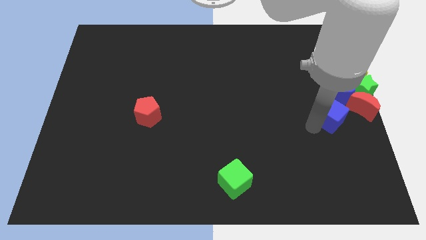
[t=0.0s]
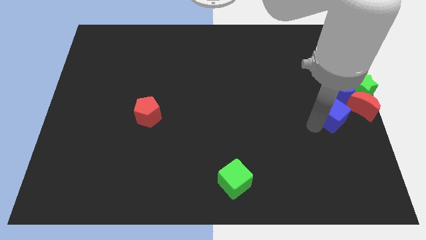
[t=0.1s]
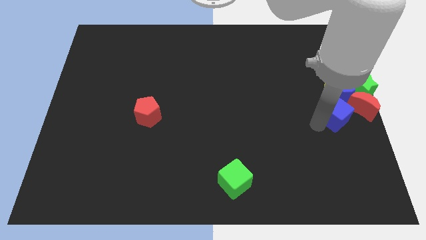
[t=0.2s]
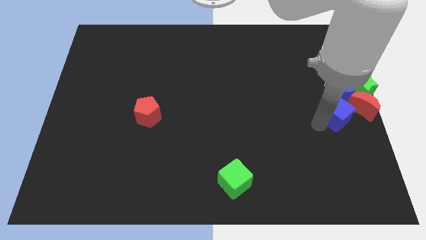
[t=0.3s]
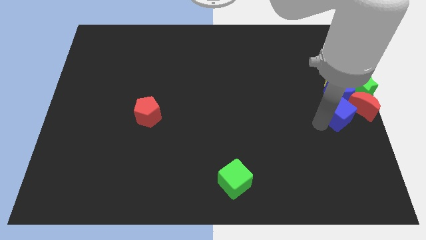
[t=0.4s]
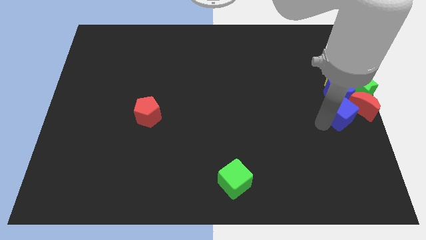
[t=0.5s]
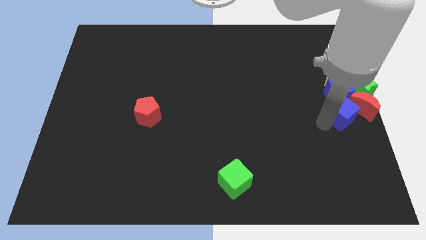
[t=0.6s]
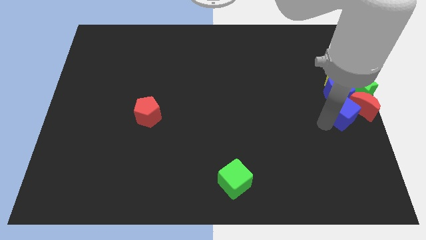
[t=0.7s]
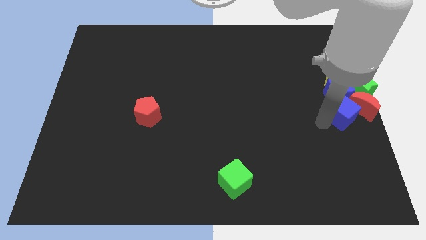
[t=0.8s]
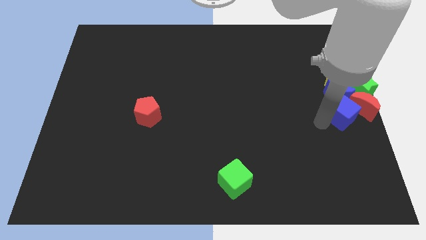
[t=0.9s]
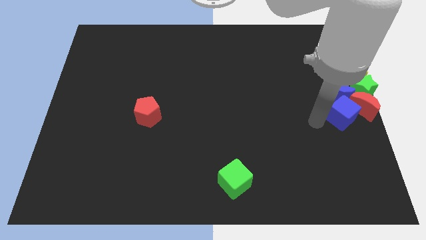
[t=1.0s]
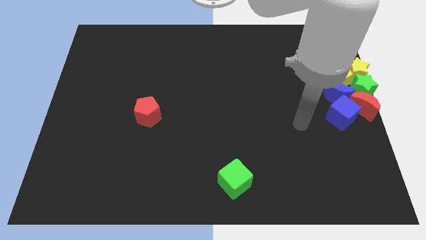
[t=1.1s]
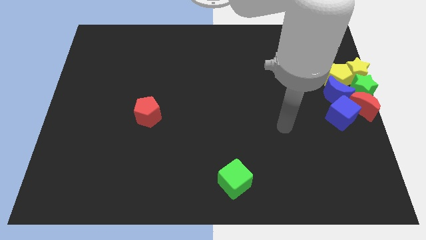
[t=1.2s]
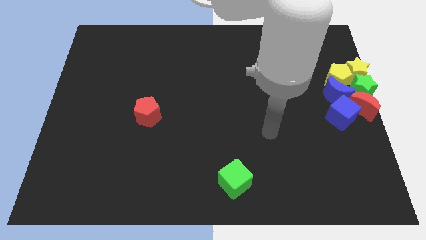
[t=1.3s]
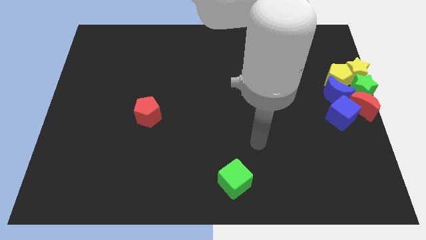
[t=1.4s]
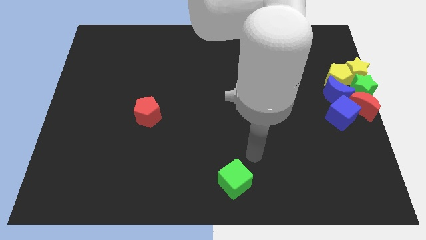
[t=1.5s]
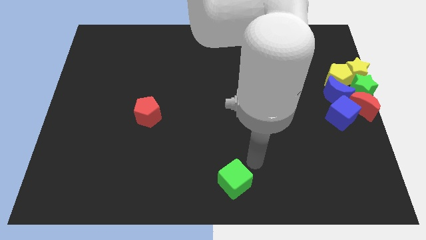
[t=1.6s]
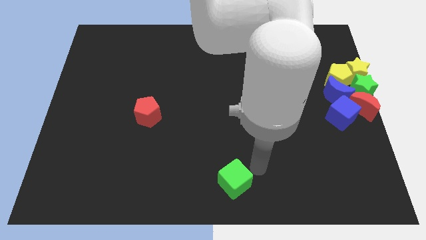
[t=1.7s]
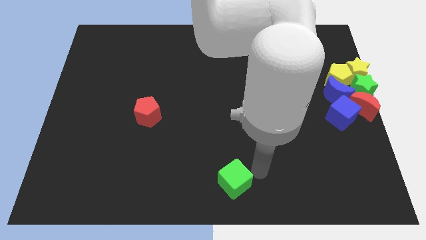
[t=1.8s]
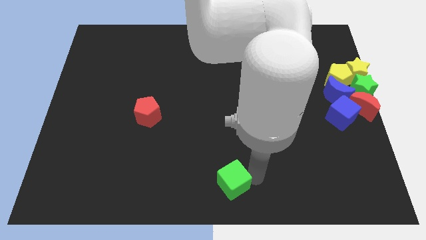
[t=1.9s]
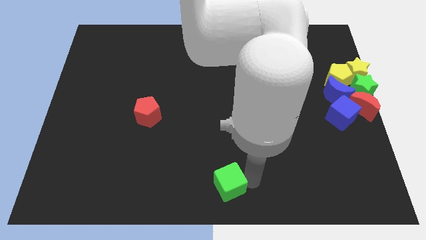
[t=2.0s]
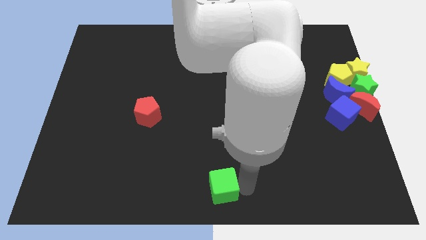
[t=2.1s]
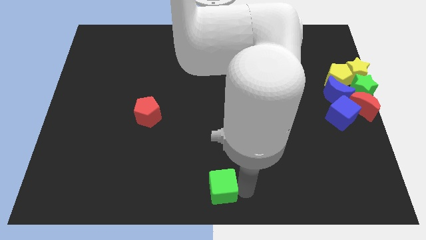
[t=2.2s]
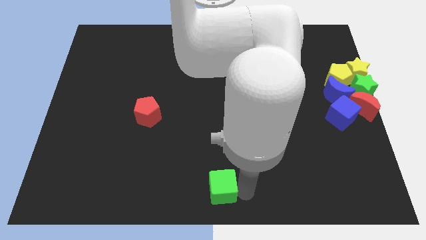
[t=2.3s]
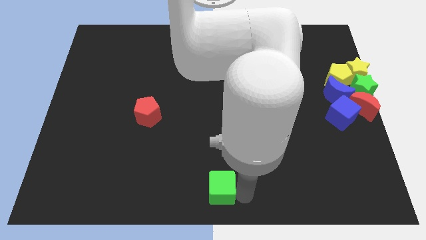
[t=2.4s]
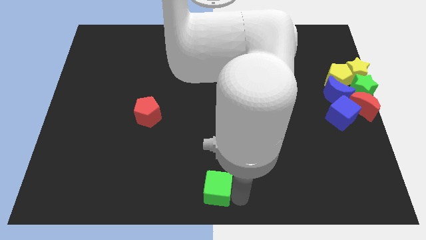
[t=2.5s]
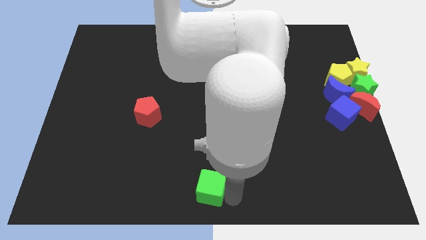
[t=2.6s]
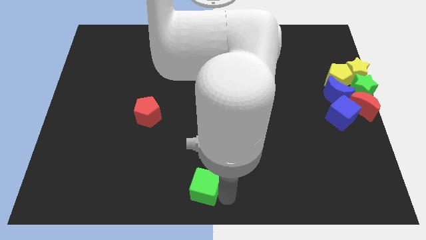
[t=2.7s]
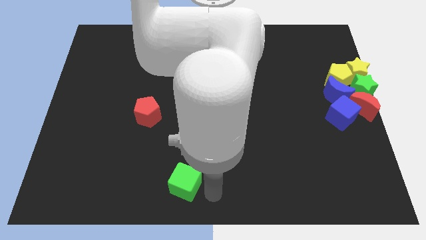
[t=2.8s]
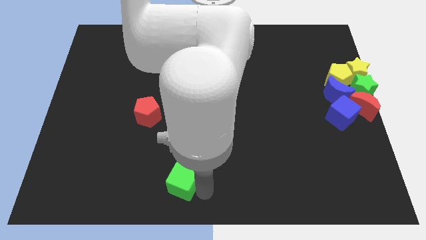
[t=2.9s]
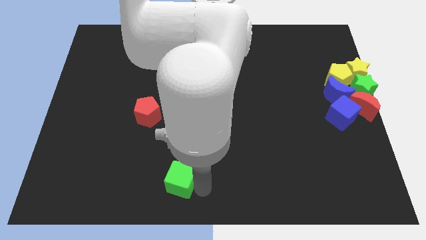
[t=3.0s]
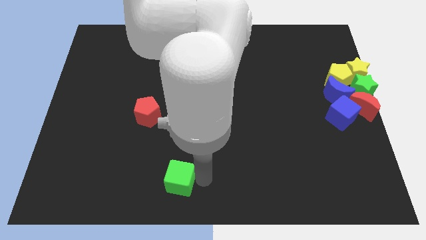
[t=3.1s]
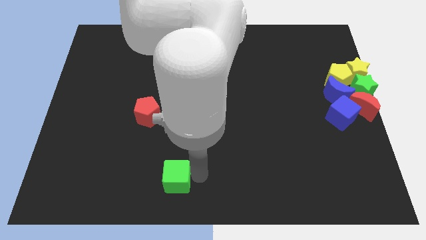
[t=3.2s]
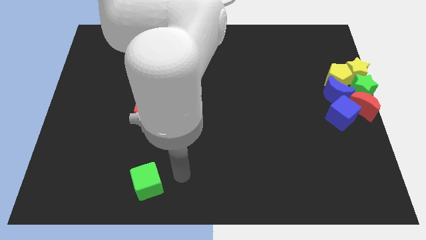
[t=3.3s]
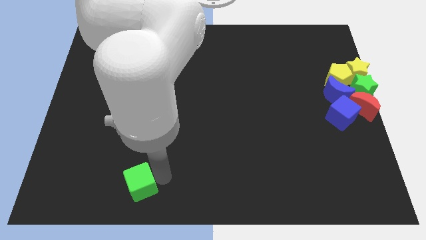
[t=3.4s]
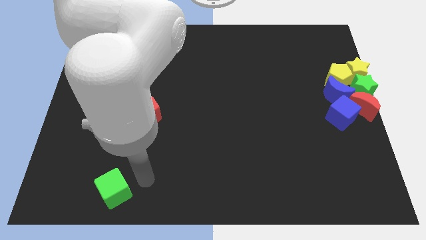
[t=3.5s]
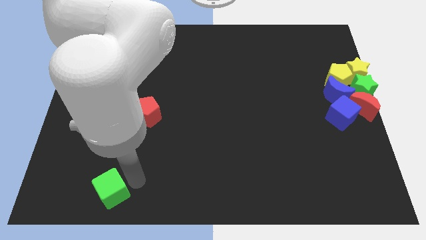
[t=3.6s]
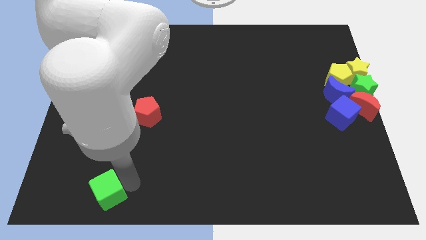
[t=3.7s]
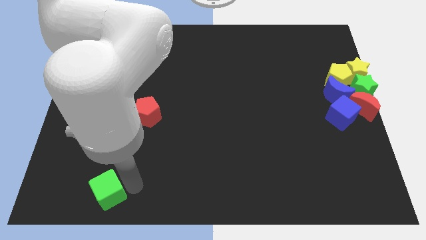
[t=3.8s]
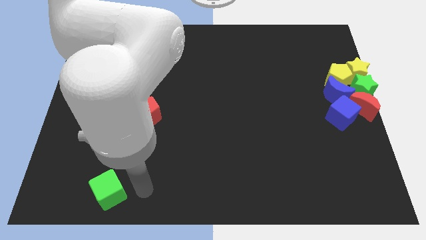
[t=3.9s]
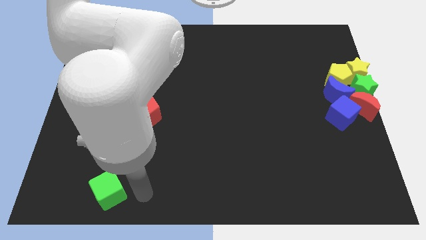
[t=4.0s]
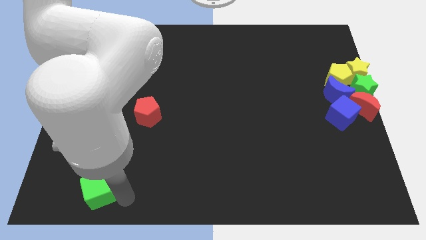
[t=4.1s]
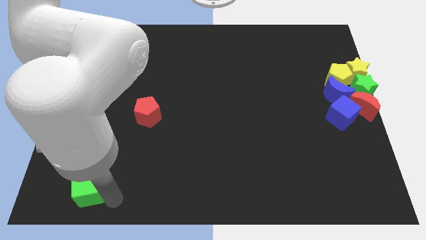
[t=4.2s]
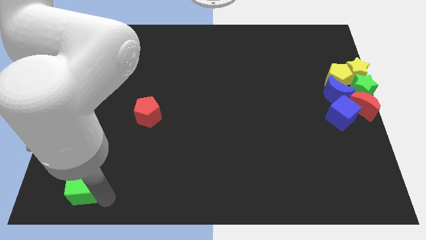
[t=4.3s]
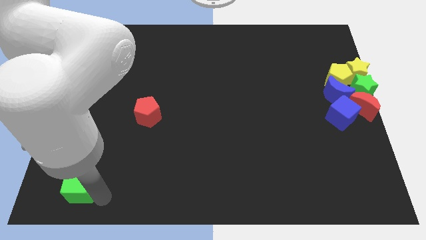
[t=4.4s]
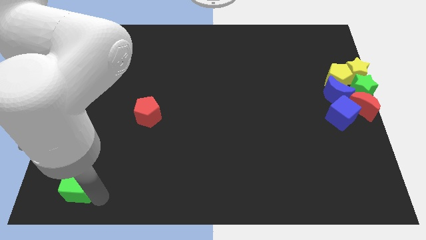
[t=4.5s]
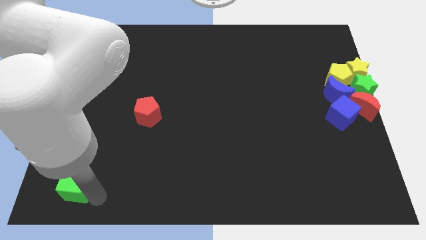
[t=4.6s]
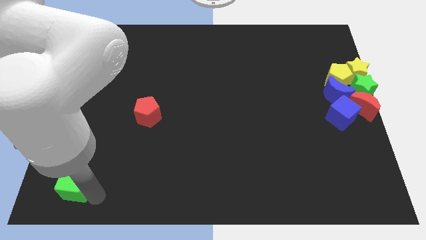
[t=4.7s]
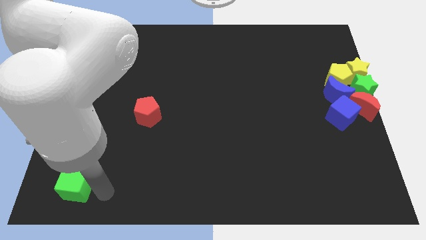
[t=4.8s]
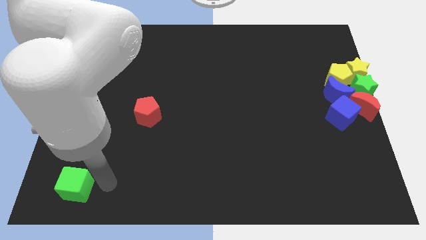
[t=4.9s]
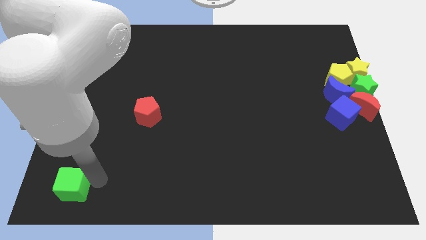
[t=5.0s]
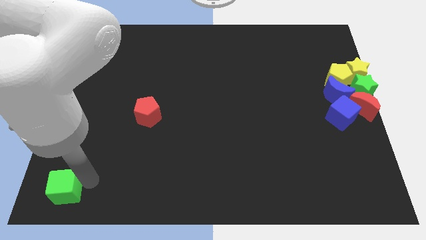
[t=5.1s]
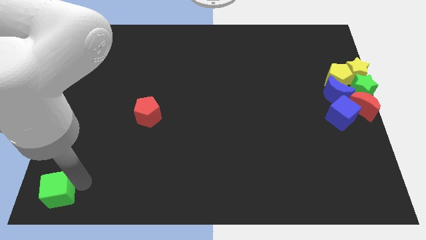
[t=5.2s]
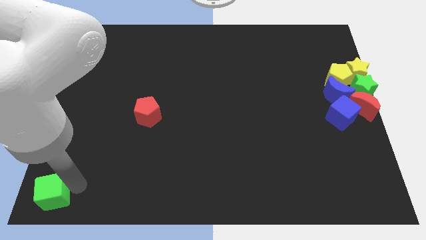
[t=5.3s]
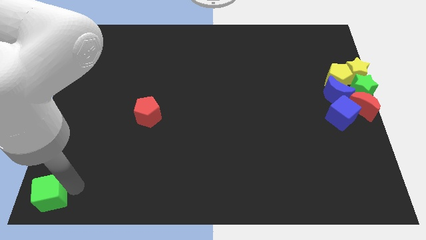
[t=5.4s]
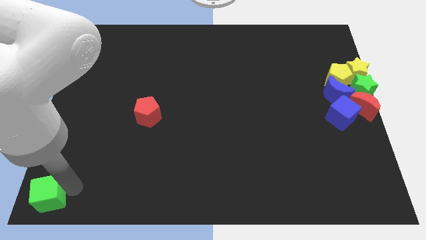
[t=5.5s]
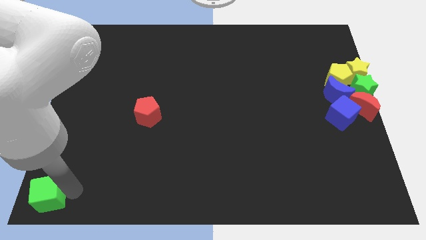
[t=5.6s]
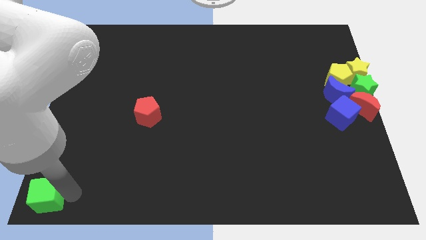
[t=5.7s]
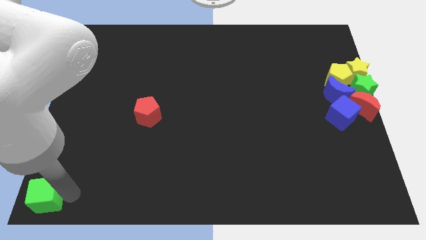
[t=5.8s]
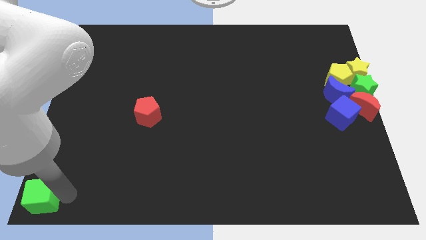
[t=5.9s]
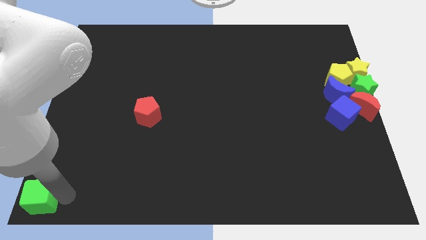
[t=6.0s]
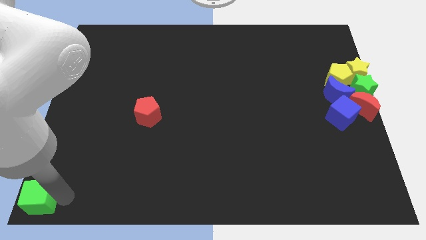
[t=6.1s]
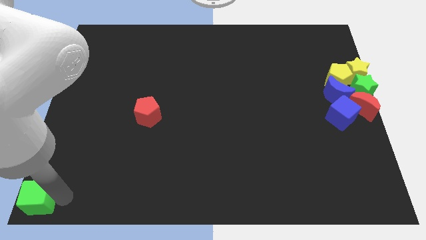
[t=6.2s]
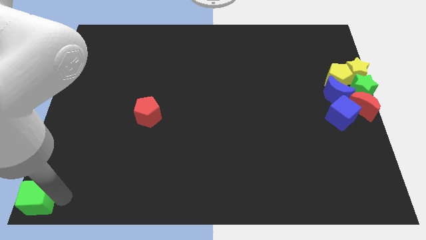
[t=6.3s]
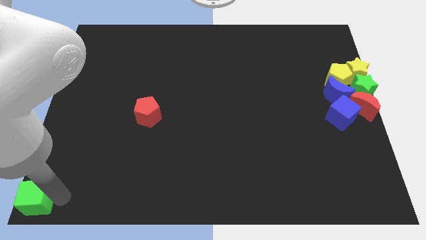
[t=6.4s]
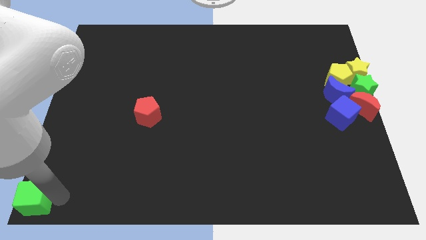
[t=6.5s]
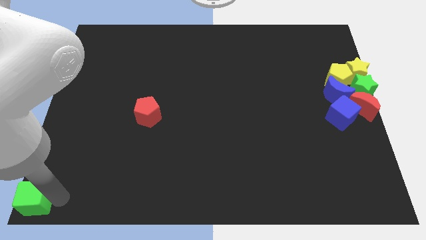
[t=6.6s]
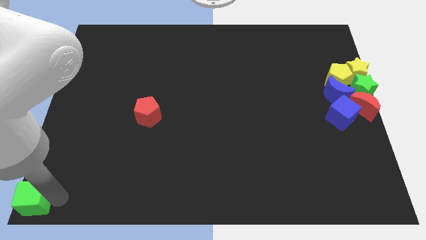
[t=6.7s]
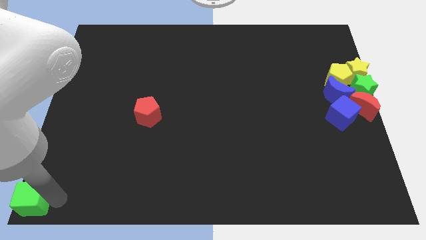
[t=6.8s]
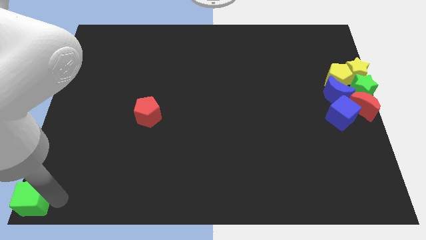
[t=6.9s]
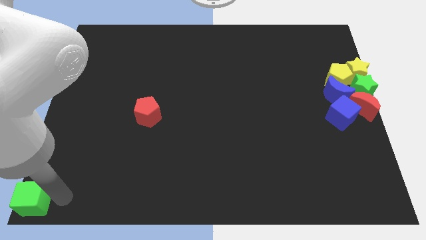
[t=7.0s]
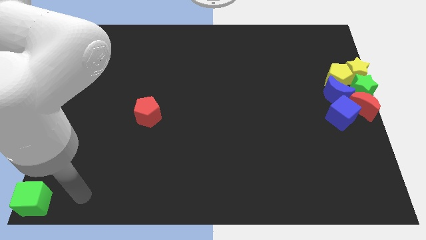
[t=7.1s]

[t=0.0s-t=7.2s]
place green cube at the bottom corner of the board

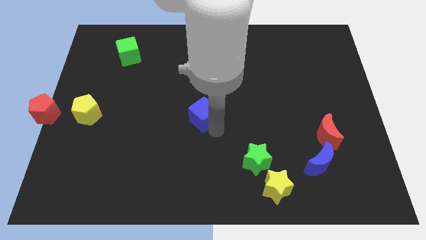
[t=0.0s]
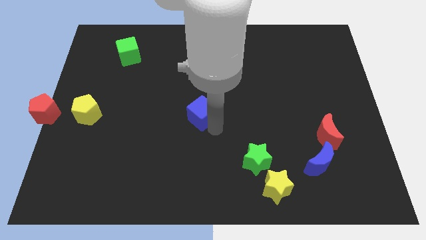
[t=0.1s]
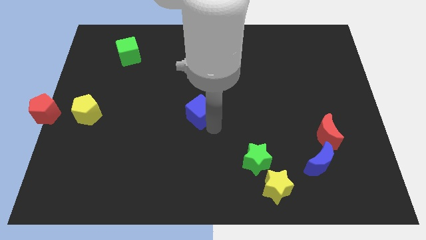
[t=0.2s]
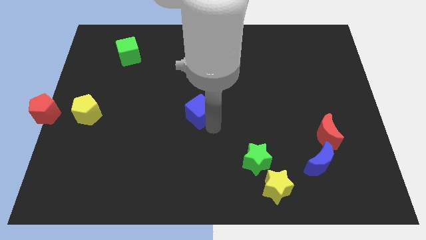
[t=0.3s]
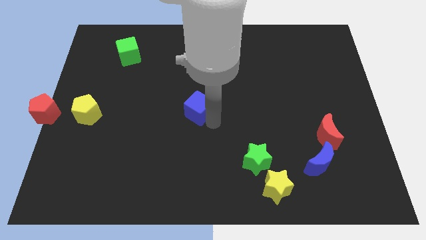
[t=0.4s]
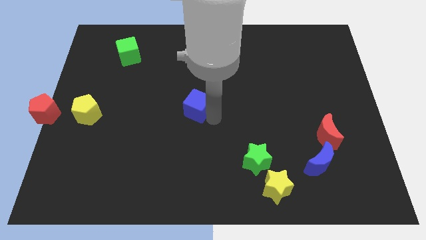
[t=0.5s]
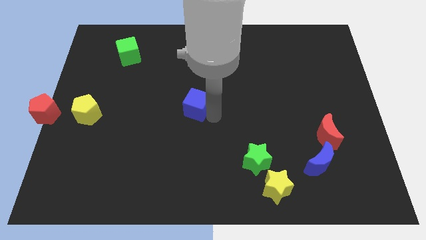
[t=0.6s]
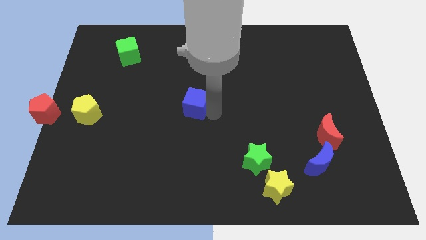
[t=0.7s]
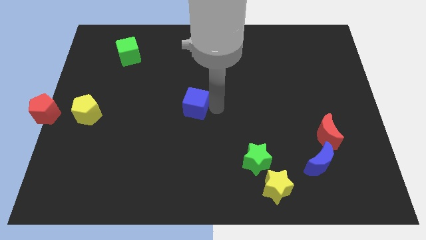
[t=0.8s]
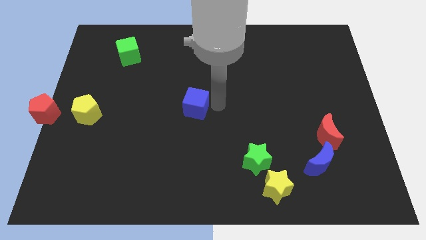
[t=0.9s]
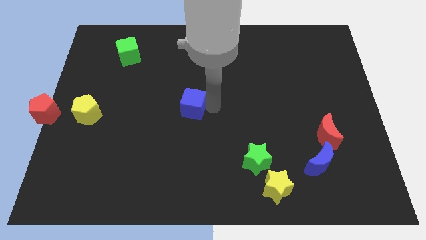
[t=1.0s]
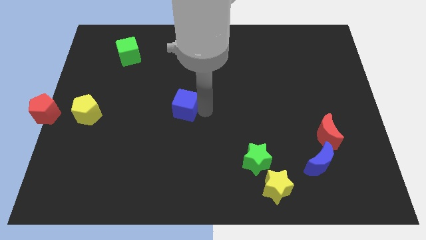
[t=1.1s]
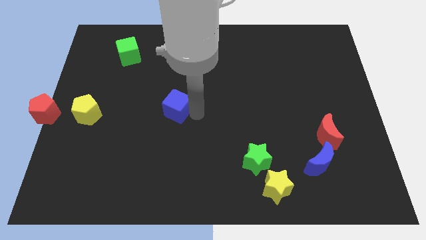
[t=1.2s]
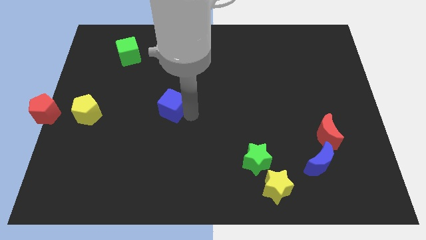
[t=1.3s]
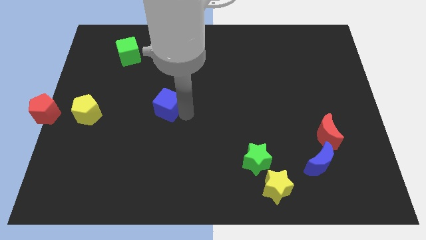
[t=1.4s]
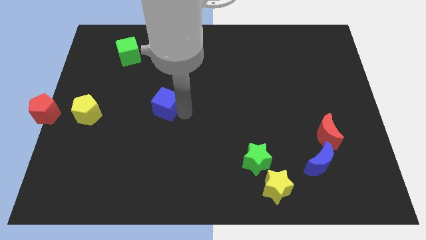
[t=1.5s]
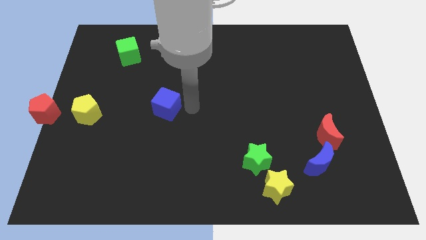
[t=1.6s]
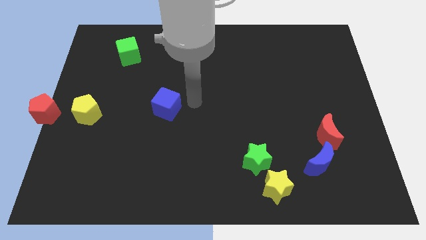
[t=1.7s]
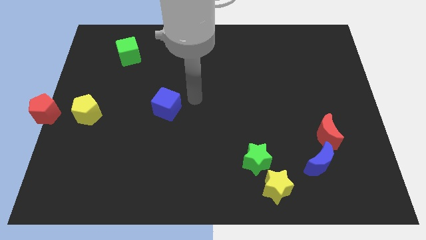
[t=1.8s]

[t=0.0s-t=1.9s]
move the blue cube to the left
